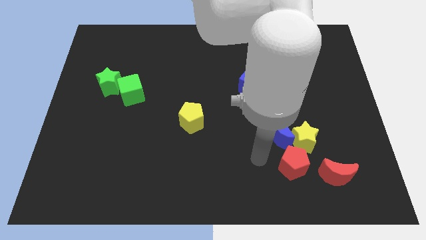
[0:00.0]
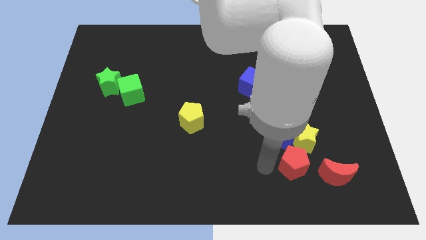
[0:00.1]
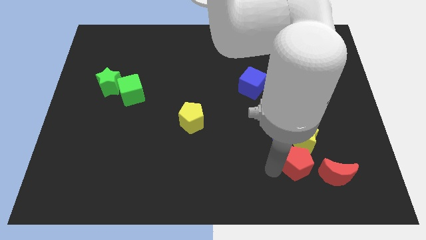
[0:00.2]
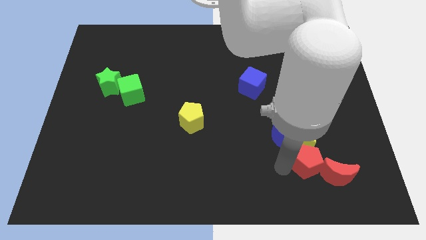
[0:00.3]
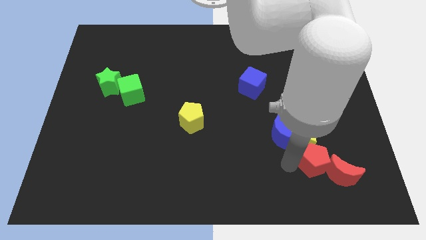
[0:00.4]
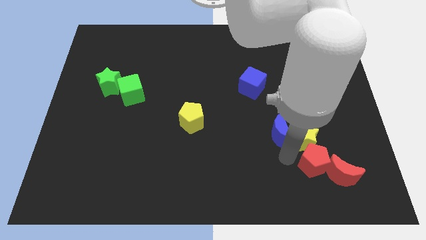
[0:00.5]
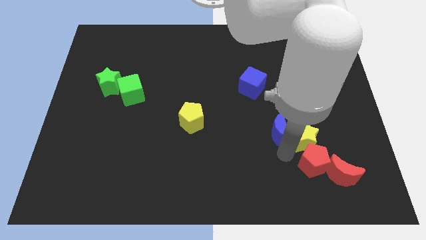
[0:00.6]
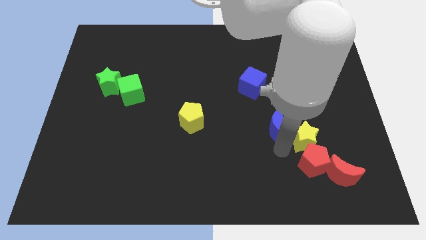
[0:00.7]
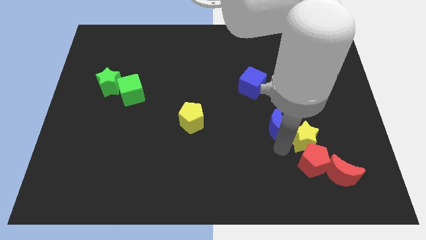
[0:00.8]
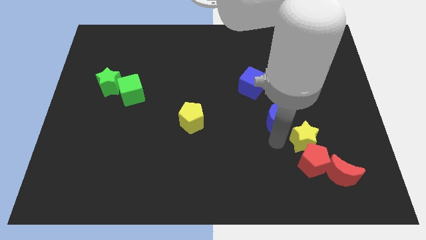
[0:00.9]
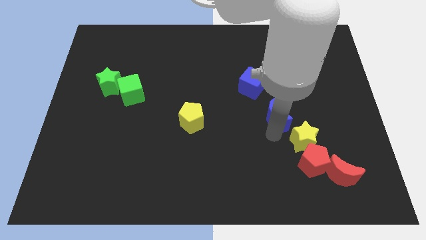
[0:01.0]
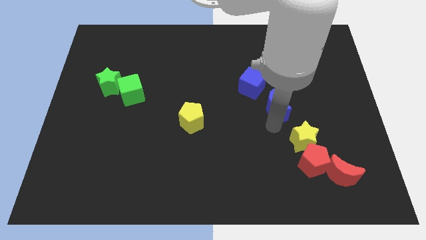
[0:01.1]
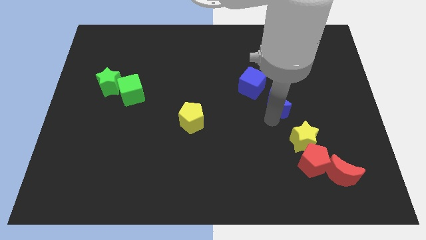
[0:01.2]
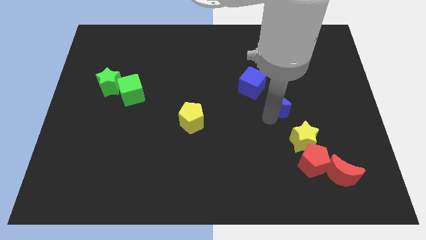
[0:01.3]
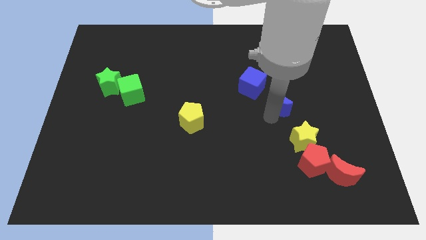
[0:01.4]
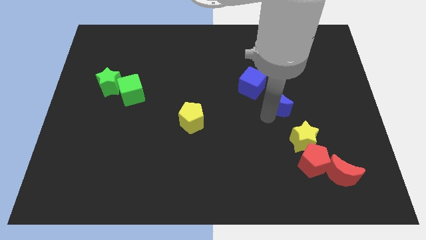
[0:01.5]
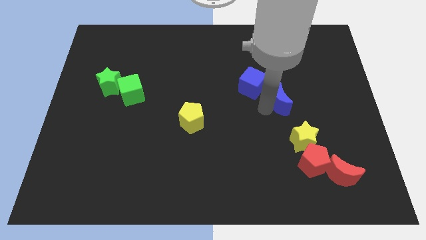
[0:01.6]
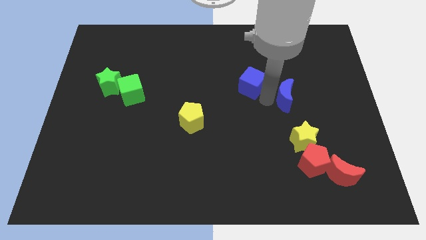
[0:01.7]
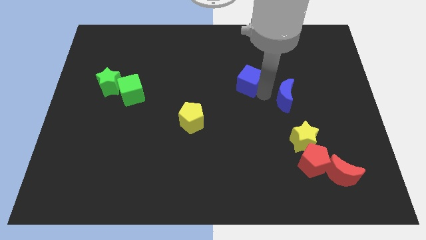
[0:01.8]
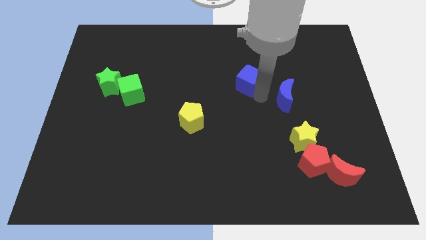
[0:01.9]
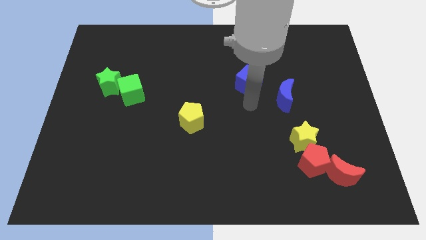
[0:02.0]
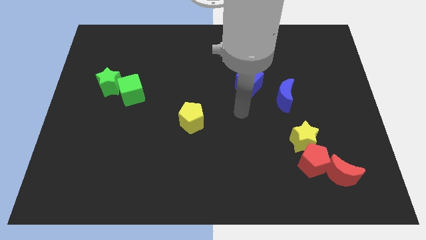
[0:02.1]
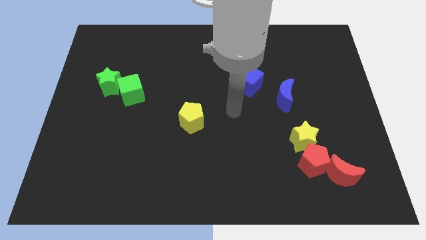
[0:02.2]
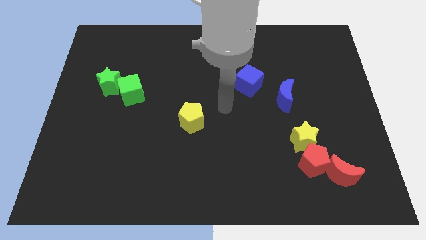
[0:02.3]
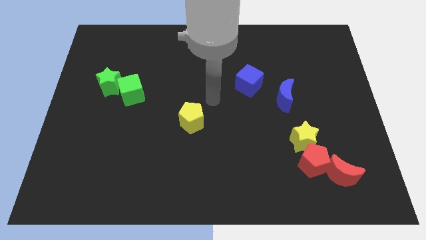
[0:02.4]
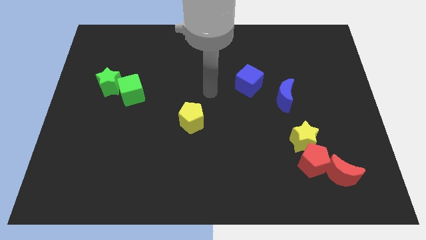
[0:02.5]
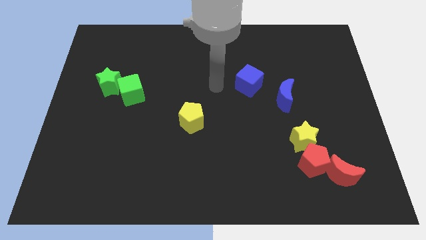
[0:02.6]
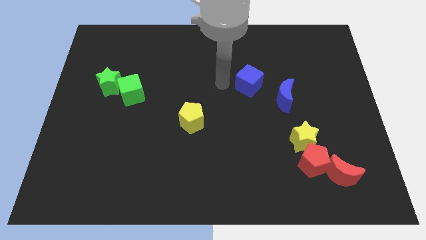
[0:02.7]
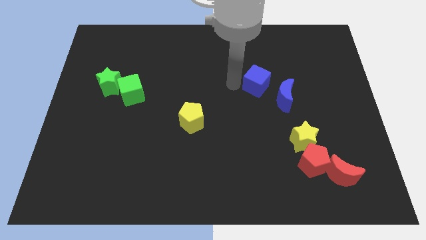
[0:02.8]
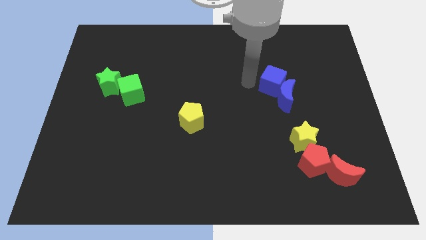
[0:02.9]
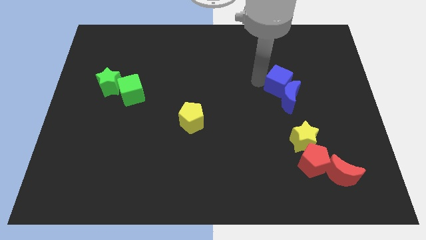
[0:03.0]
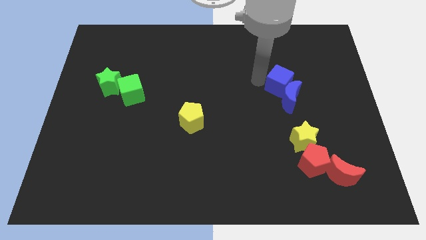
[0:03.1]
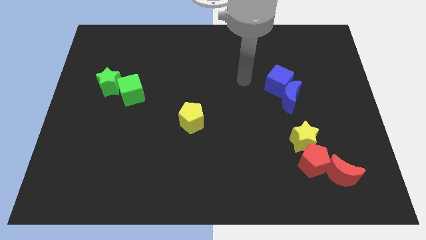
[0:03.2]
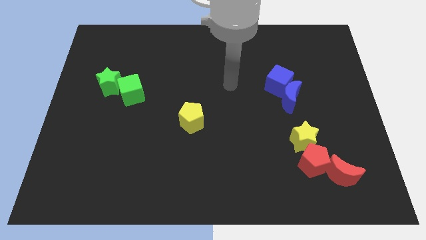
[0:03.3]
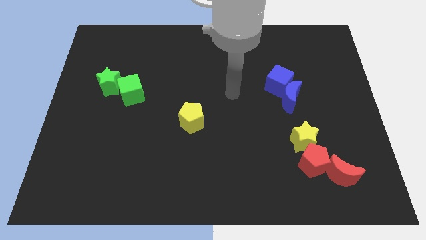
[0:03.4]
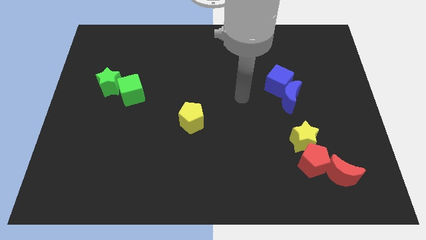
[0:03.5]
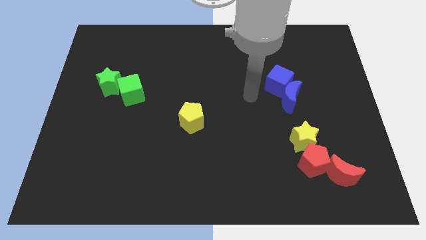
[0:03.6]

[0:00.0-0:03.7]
place blue cube to the top of blue moon

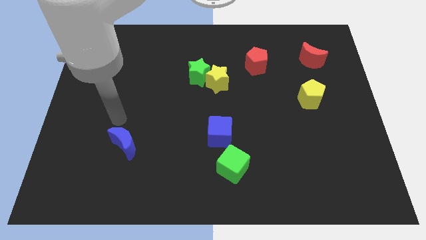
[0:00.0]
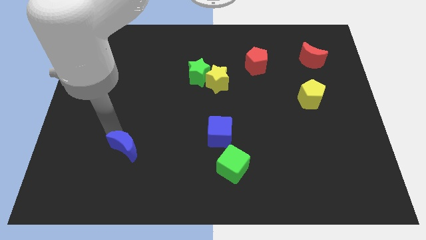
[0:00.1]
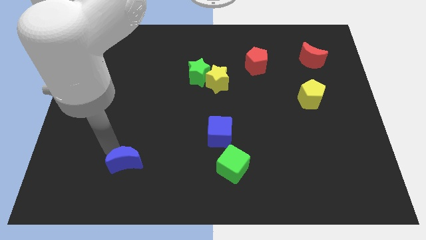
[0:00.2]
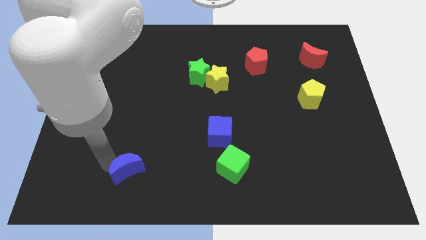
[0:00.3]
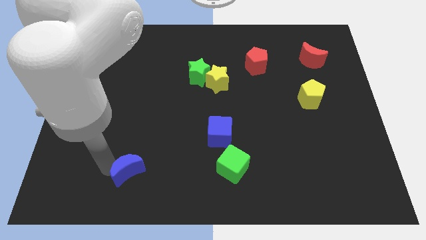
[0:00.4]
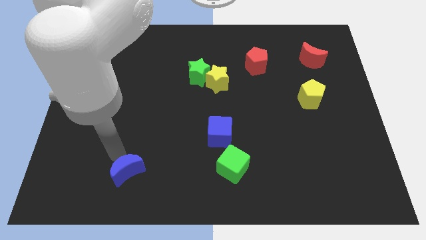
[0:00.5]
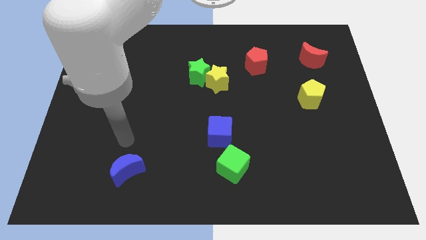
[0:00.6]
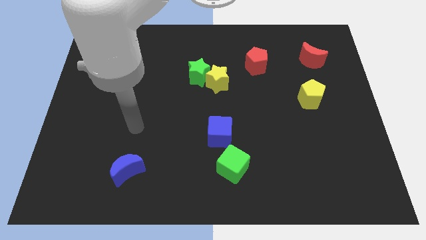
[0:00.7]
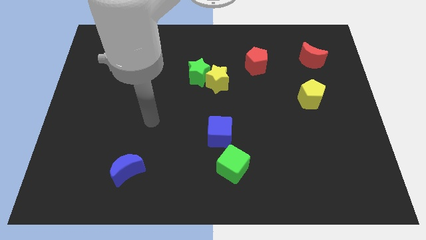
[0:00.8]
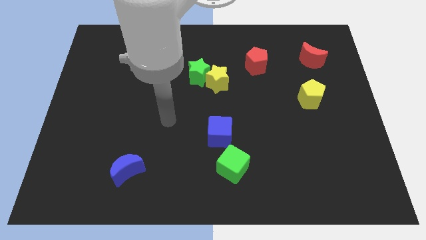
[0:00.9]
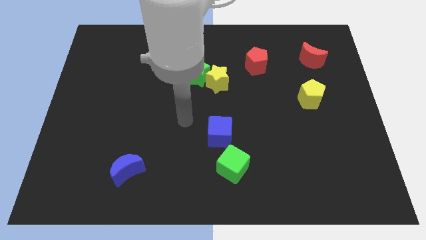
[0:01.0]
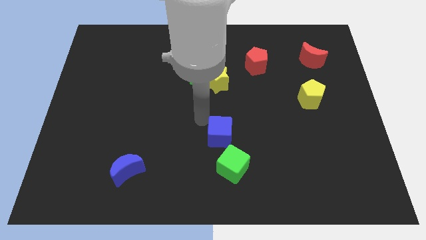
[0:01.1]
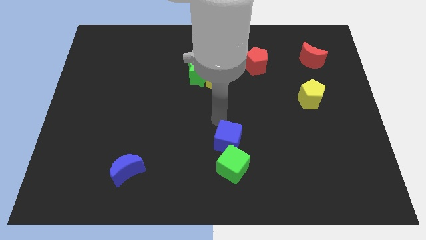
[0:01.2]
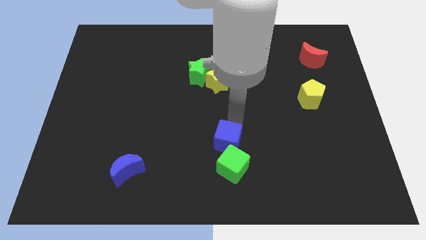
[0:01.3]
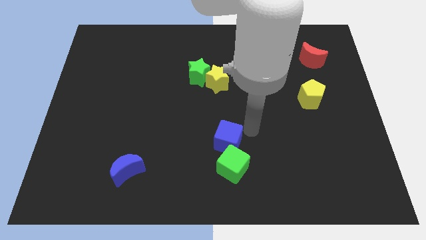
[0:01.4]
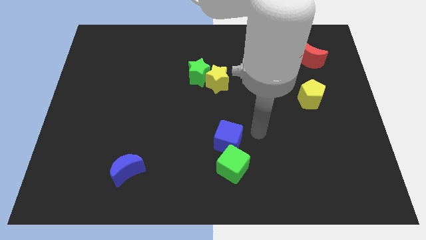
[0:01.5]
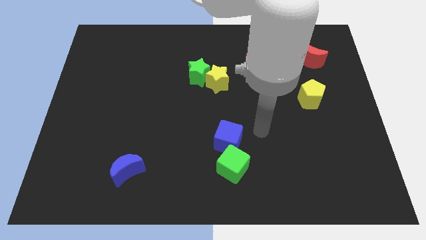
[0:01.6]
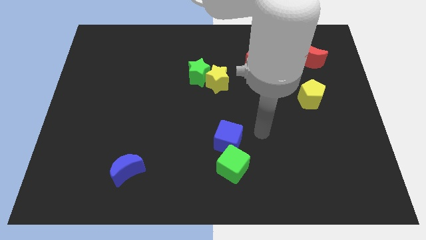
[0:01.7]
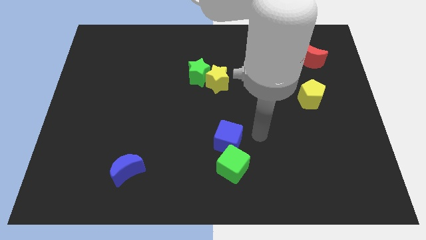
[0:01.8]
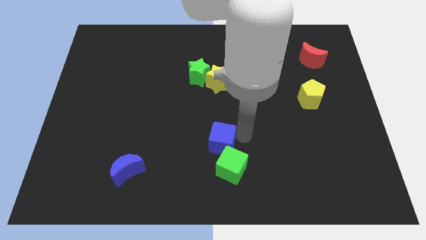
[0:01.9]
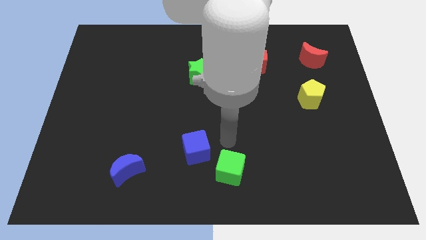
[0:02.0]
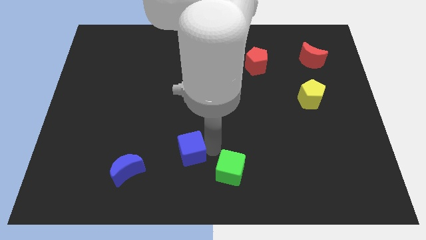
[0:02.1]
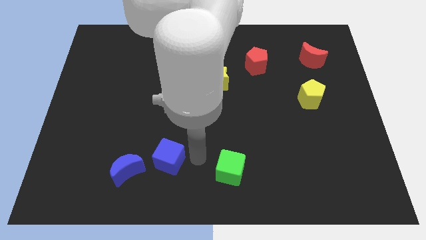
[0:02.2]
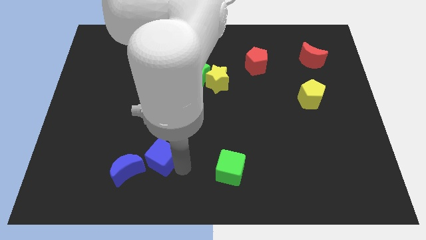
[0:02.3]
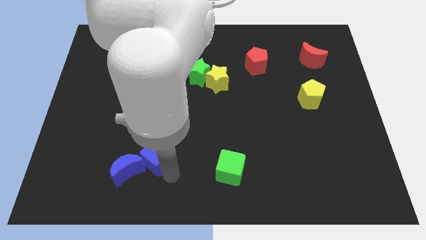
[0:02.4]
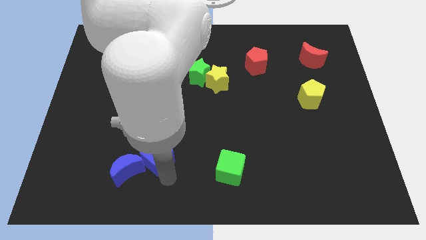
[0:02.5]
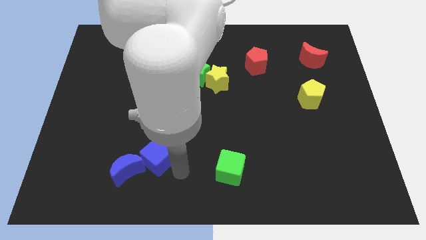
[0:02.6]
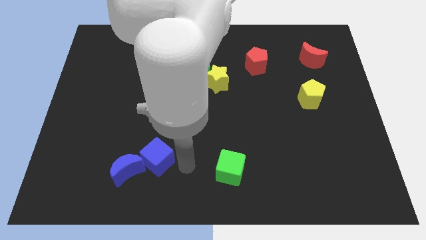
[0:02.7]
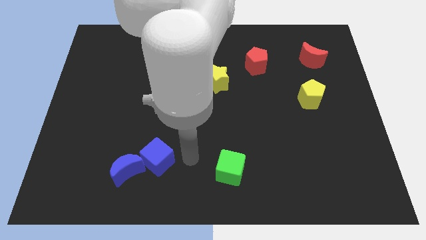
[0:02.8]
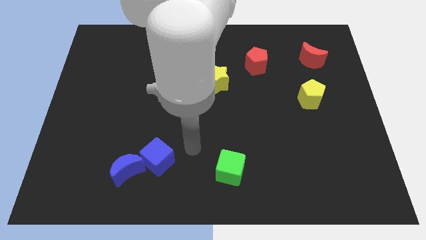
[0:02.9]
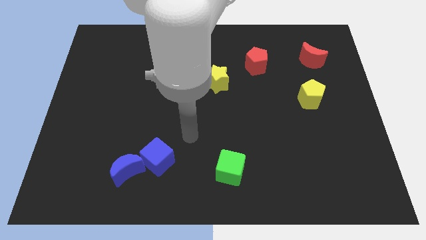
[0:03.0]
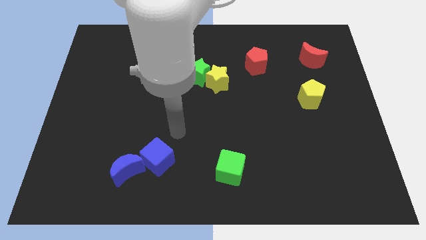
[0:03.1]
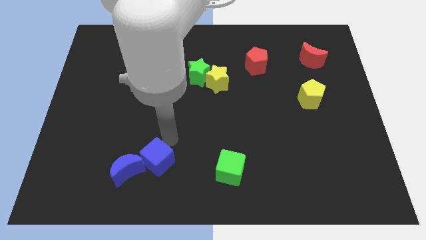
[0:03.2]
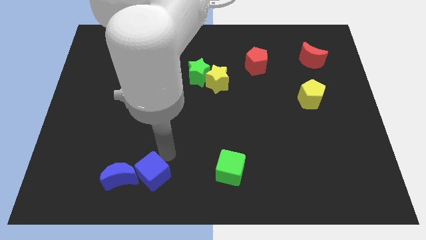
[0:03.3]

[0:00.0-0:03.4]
push the blue cube into the blue moon

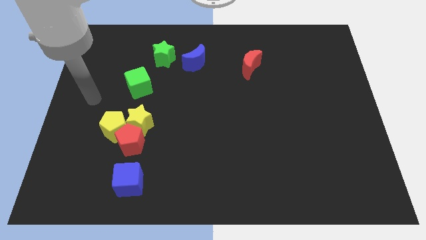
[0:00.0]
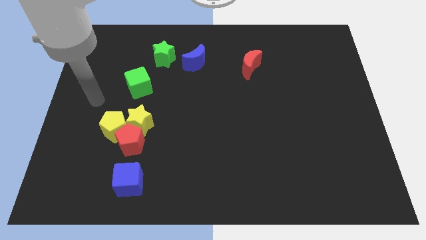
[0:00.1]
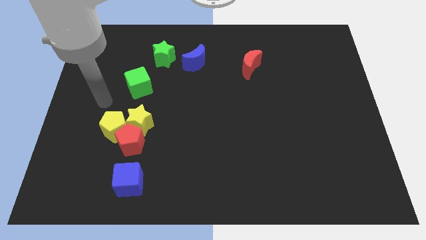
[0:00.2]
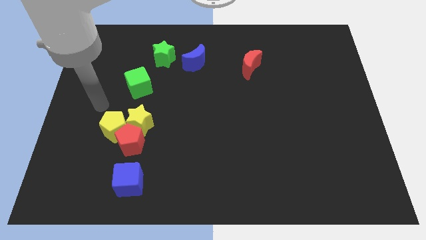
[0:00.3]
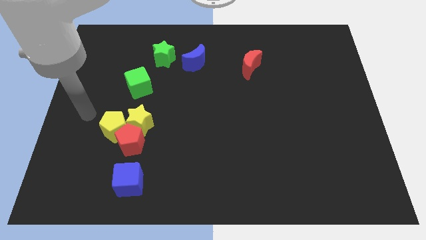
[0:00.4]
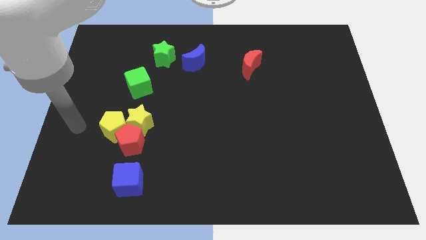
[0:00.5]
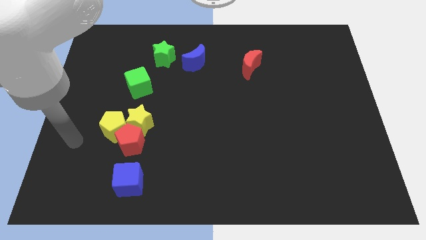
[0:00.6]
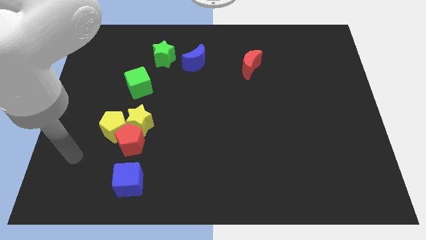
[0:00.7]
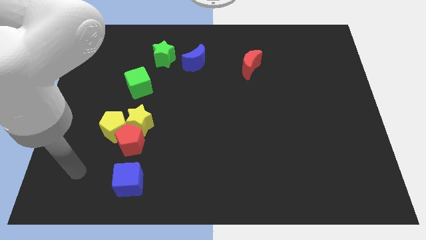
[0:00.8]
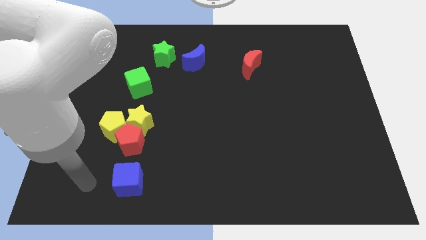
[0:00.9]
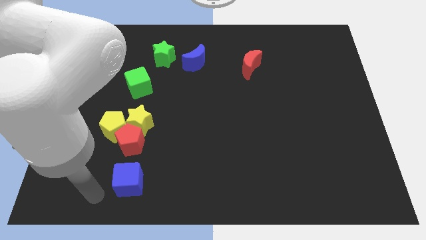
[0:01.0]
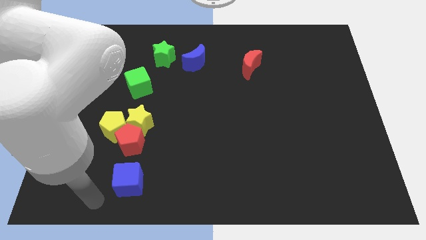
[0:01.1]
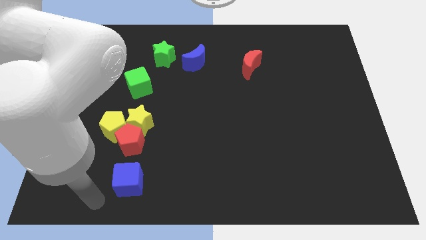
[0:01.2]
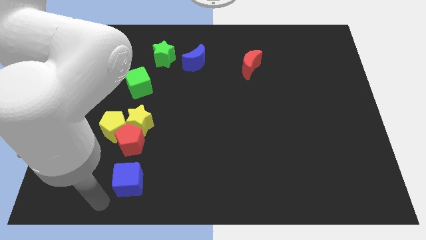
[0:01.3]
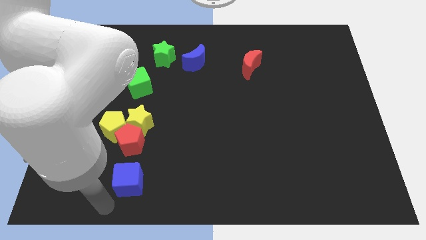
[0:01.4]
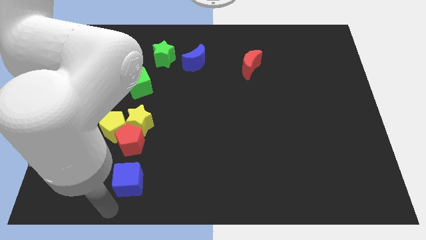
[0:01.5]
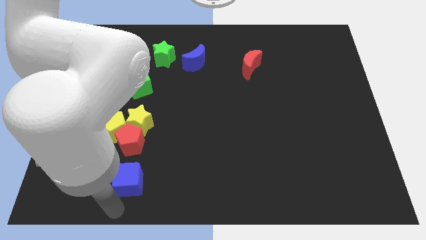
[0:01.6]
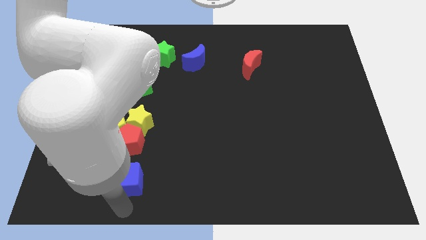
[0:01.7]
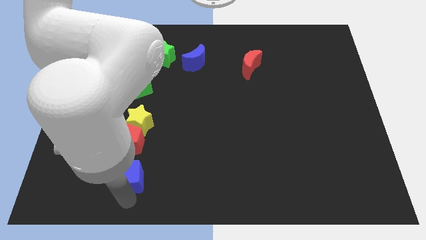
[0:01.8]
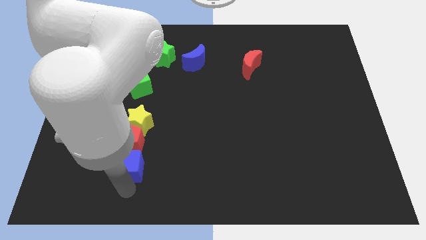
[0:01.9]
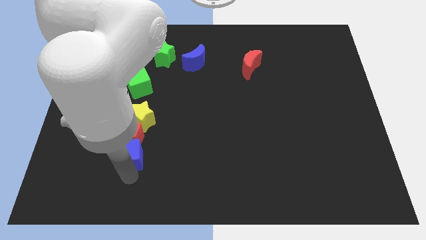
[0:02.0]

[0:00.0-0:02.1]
push the blue cube into the group of blocks
